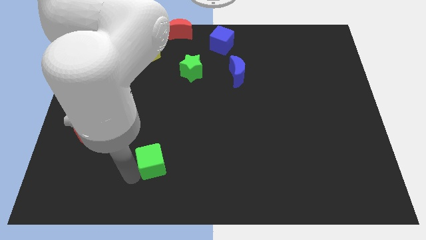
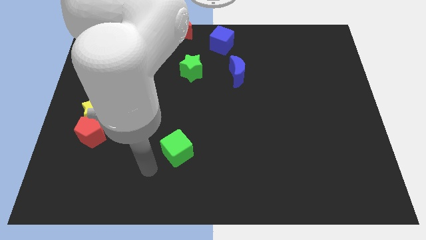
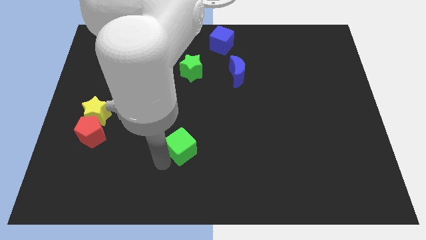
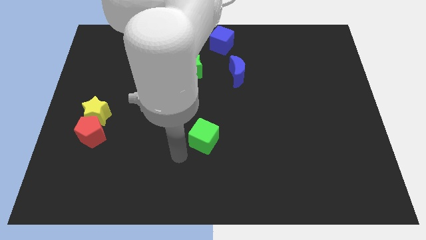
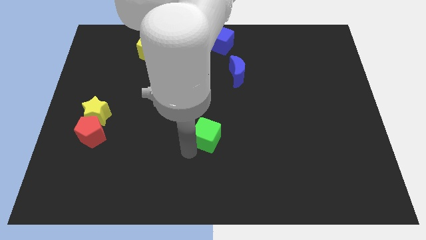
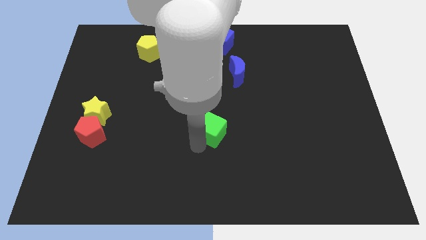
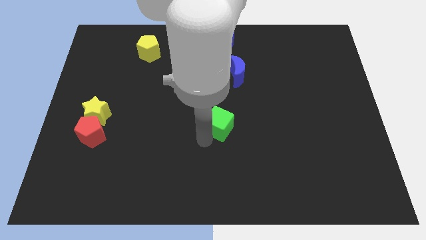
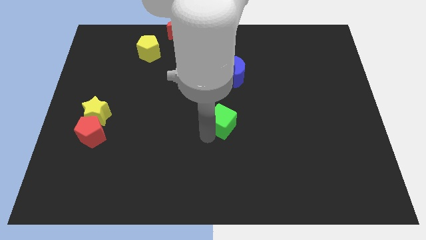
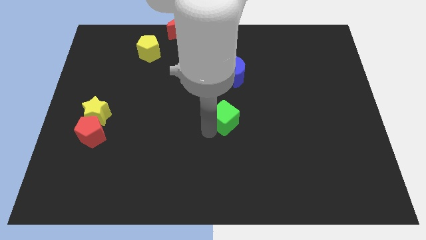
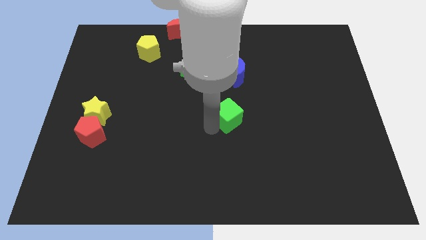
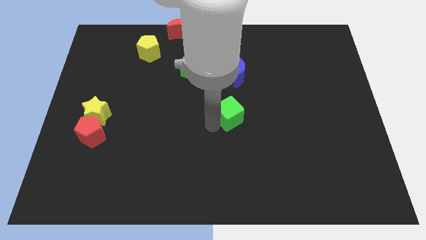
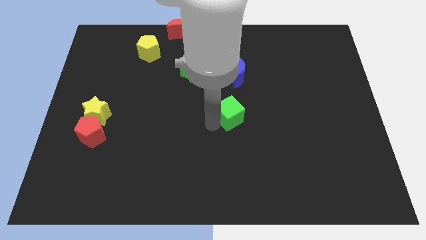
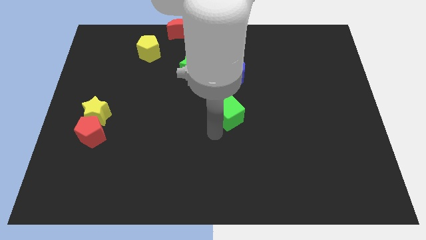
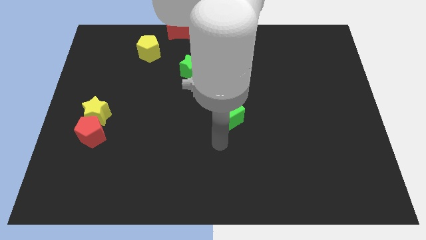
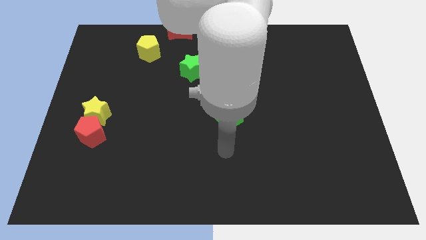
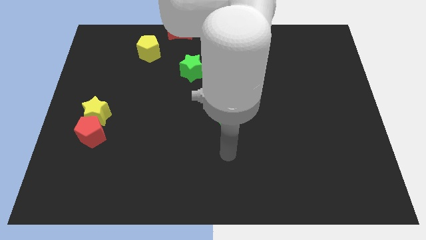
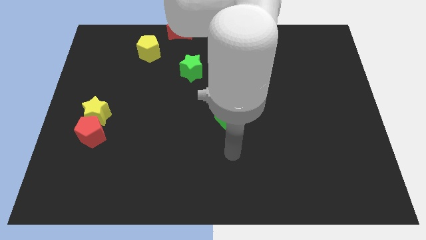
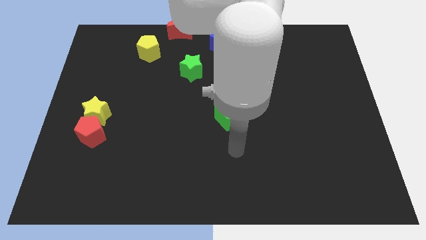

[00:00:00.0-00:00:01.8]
push the green cube slightly to the top right

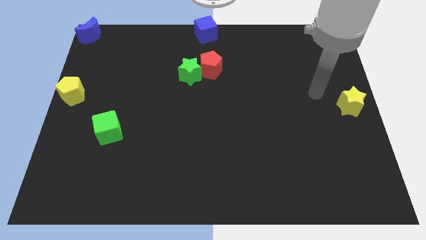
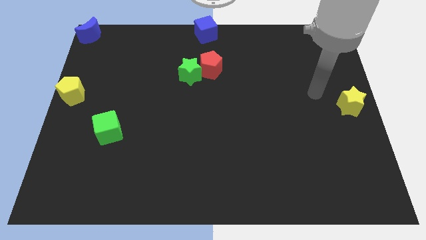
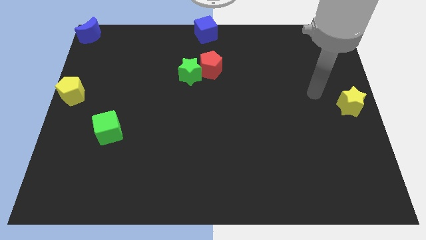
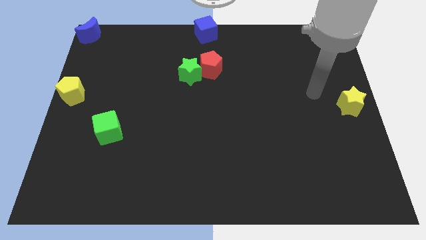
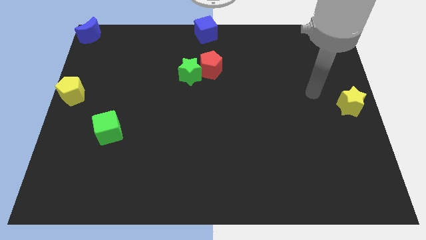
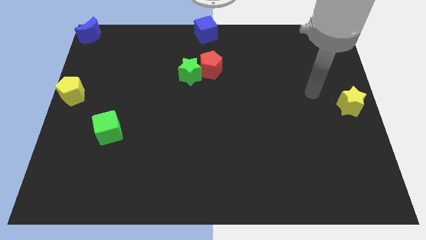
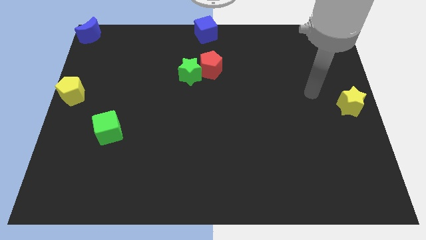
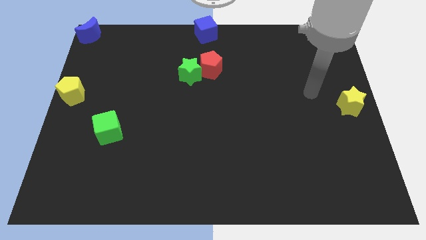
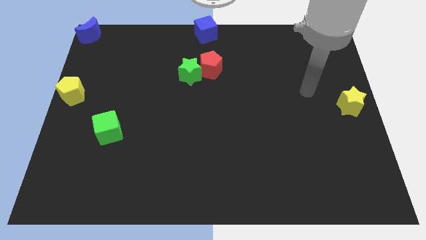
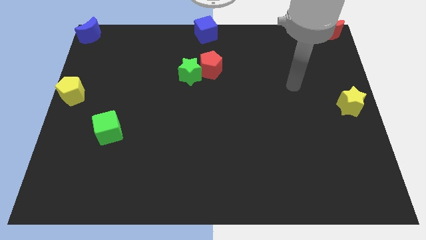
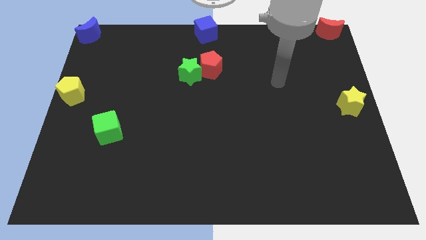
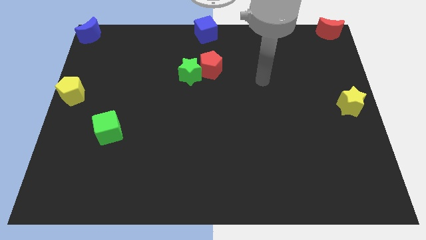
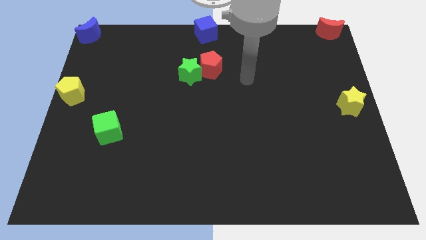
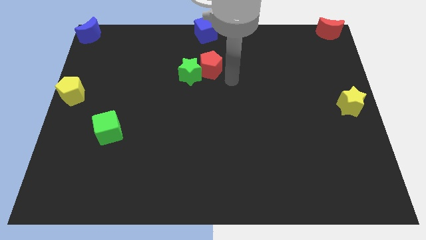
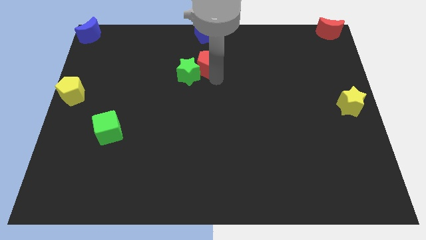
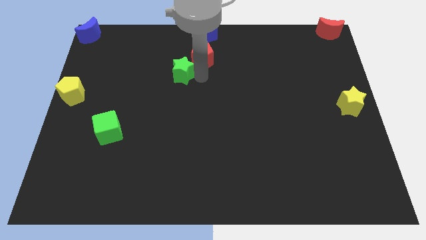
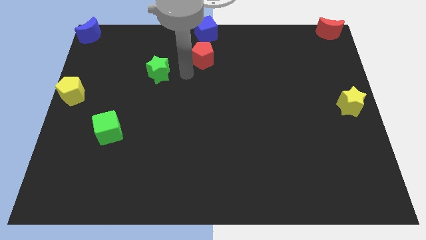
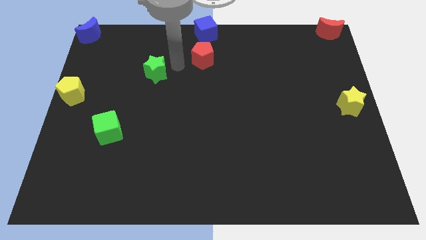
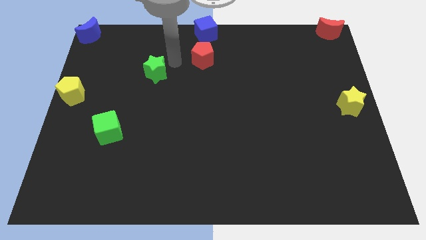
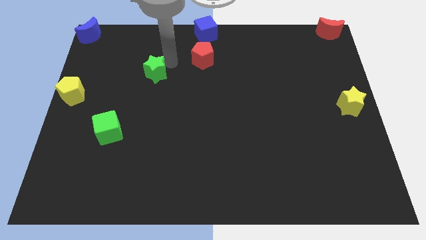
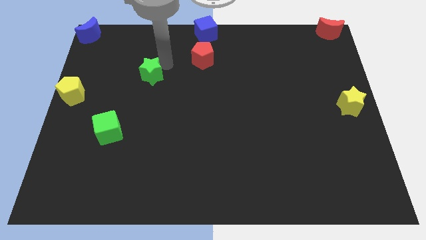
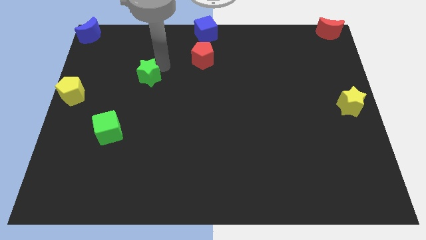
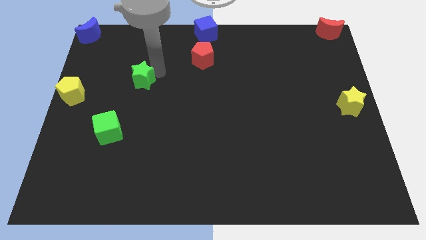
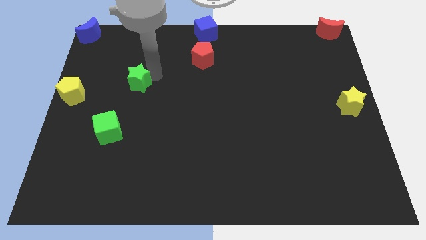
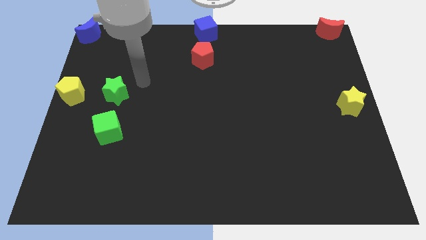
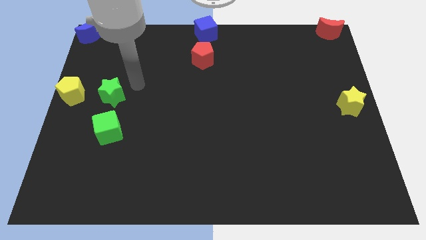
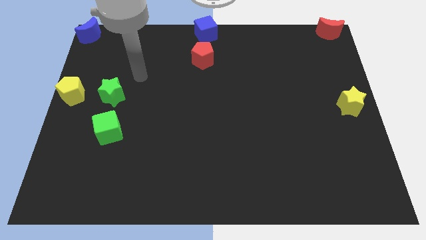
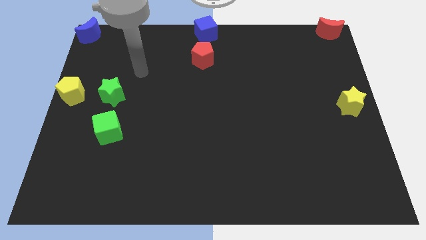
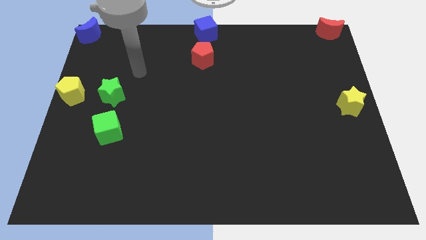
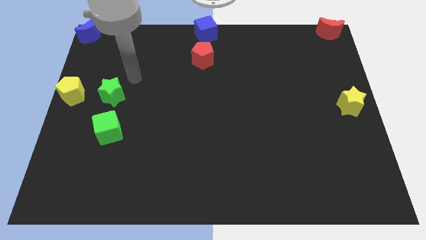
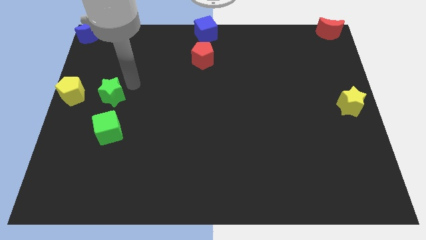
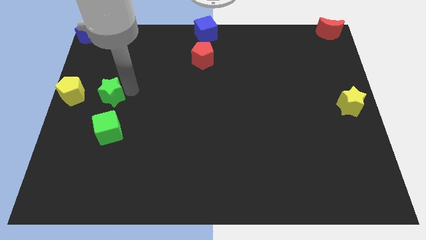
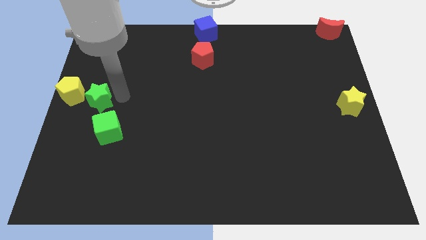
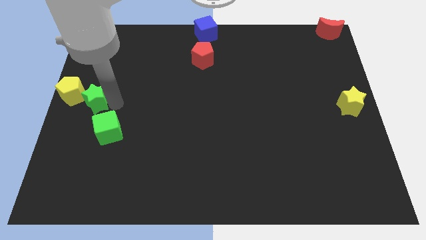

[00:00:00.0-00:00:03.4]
push the green star to the right of the yellow pentagon

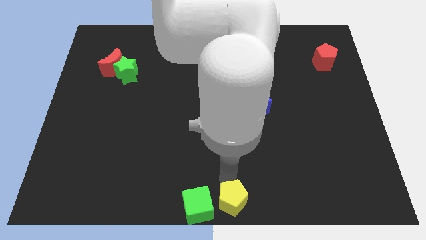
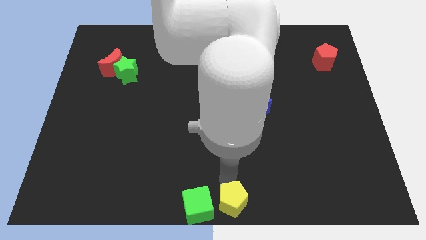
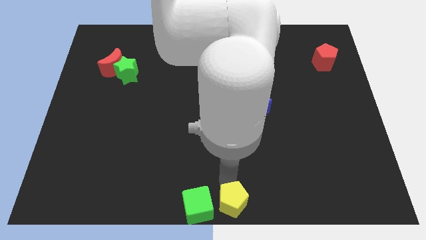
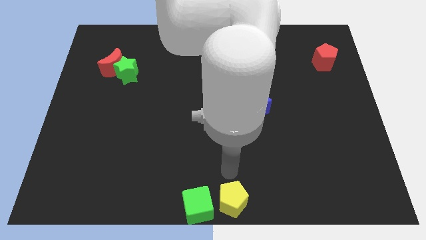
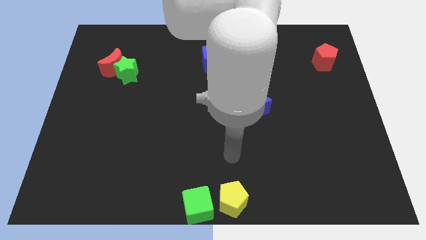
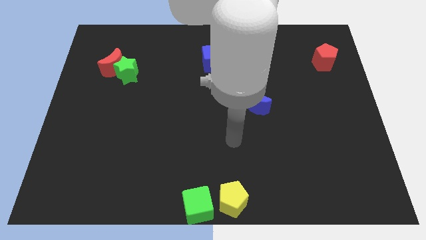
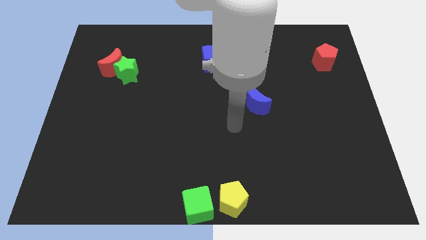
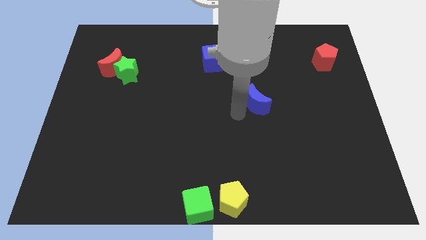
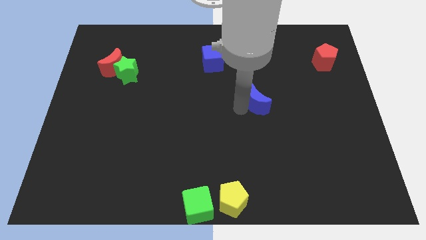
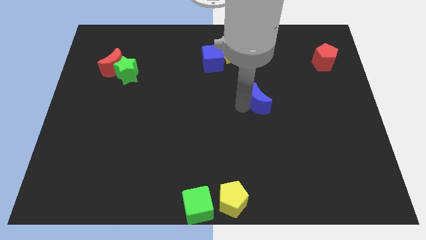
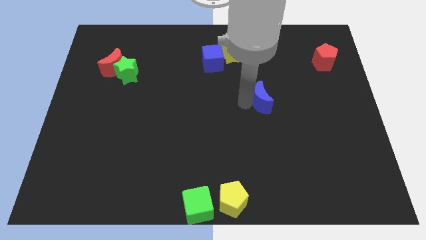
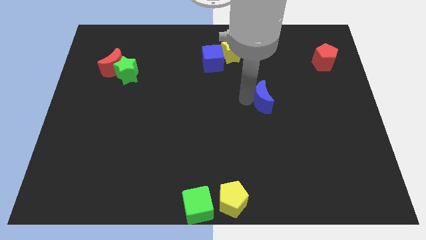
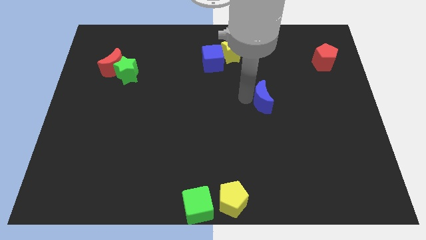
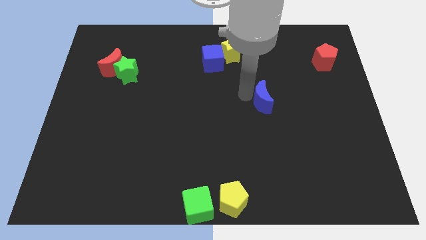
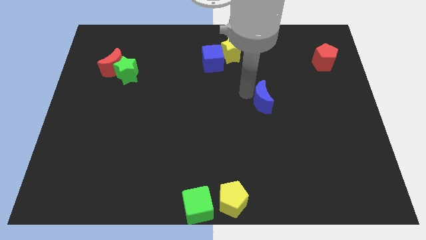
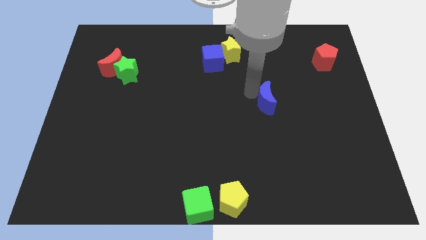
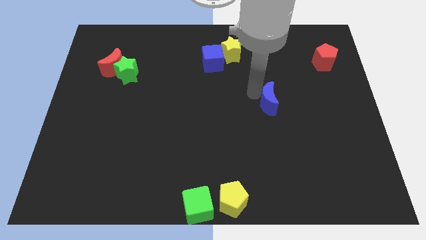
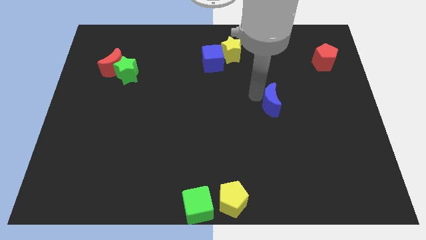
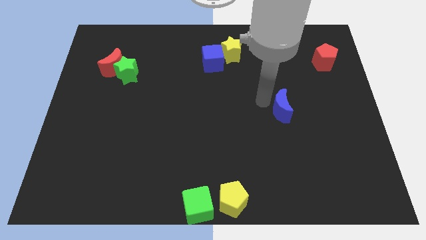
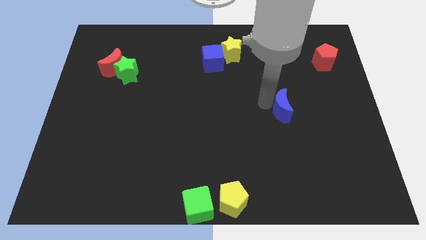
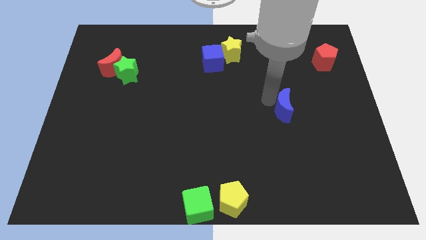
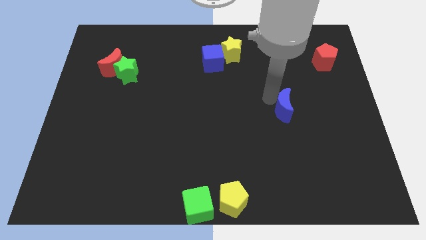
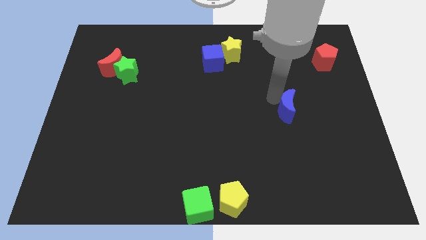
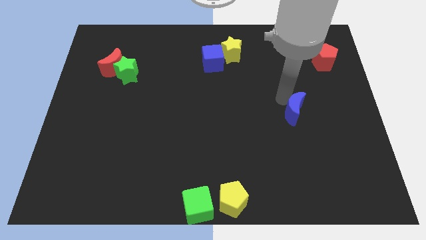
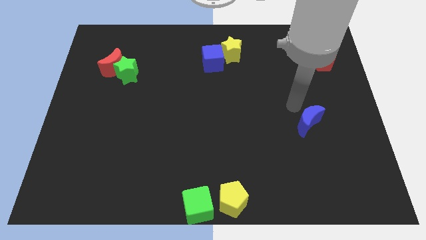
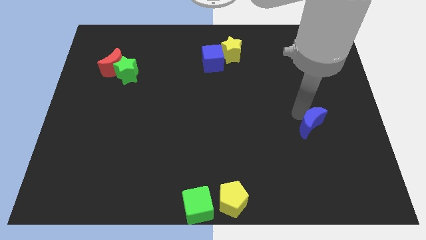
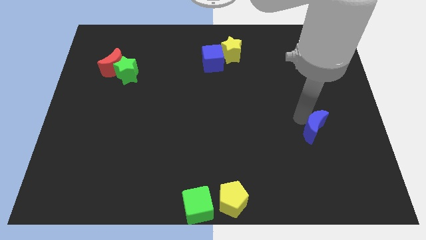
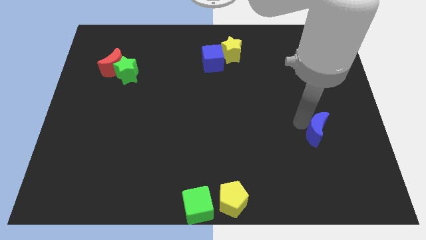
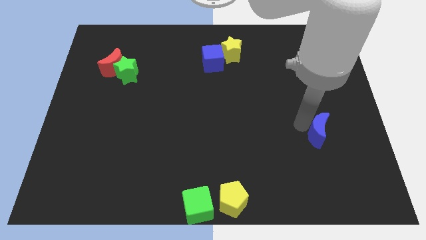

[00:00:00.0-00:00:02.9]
push blue moon to the right

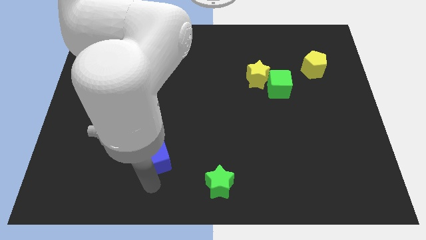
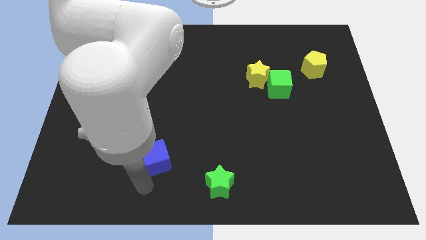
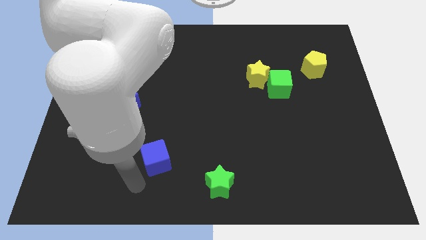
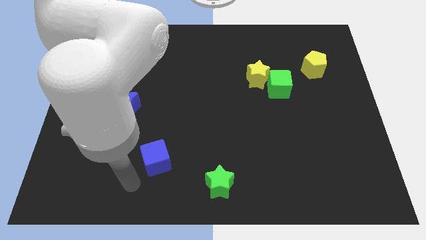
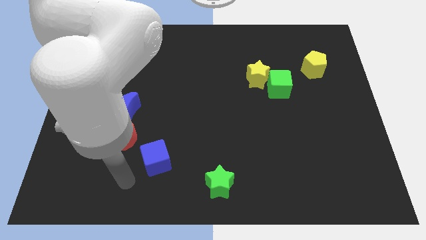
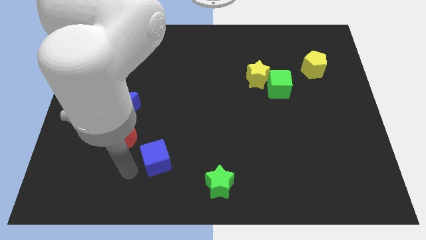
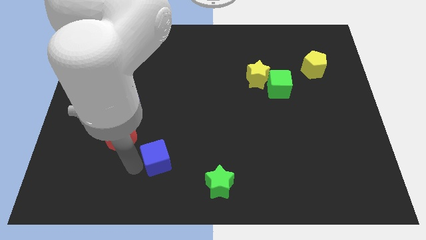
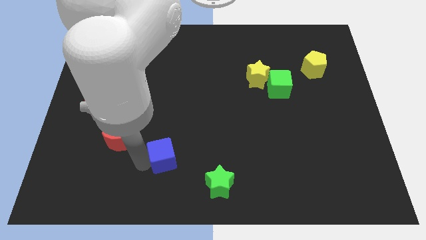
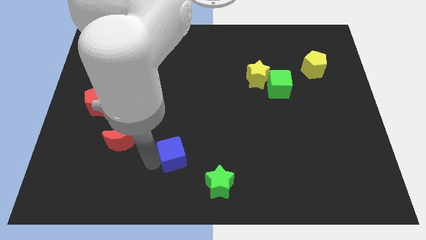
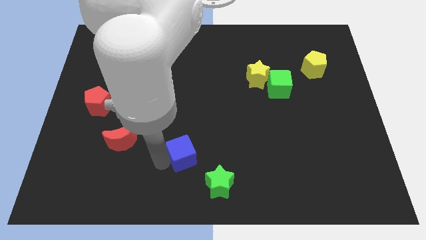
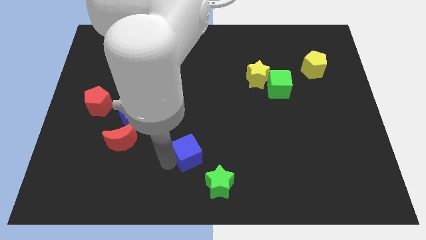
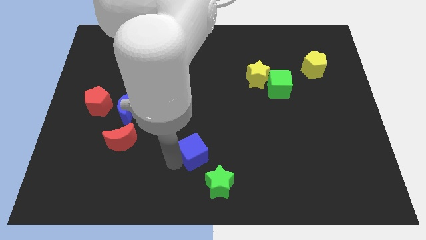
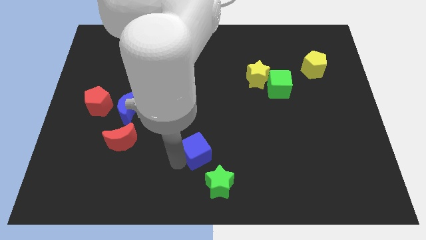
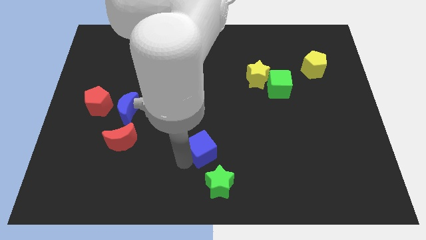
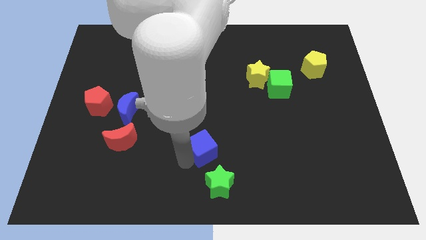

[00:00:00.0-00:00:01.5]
push the blue cube to the top of green star
